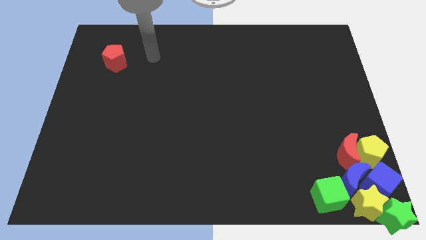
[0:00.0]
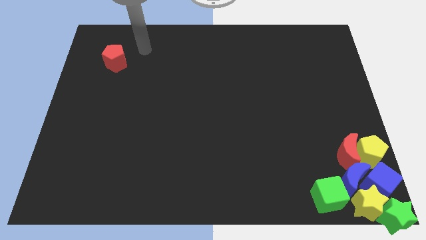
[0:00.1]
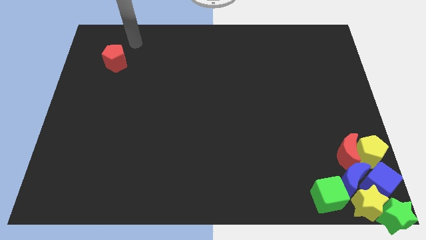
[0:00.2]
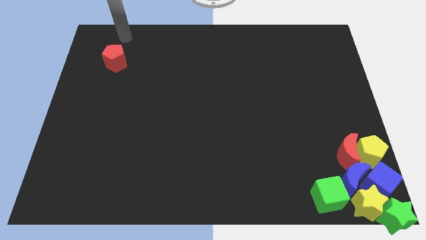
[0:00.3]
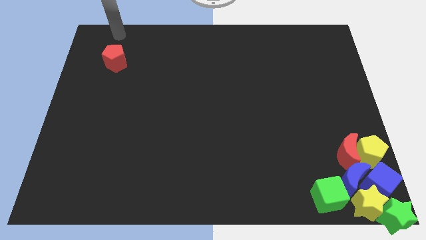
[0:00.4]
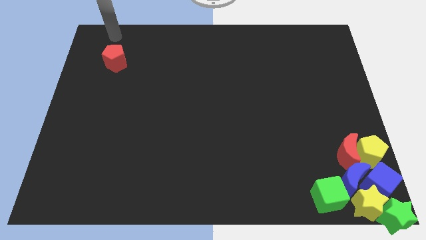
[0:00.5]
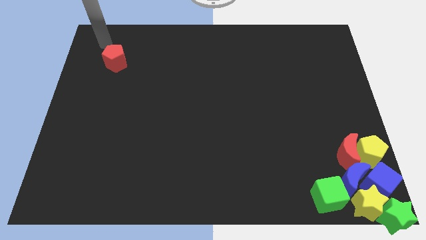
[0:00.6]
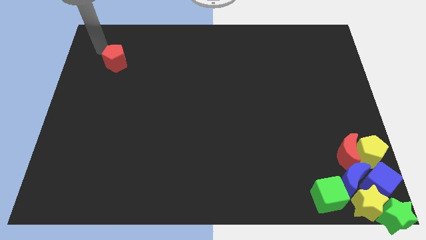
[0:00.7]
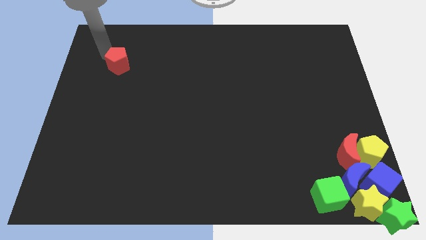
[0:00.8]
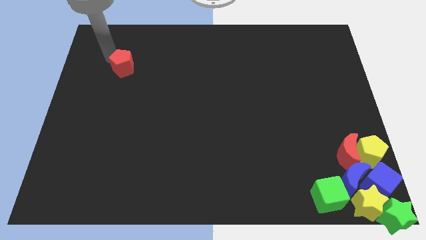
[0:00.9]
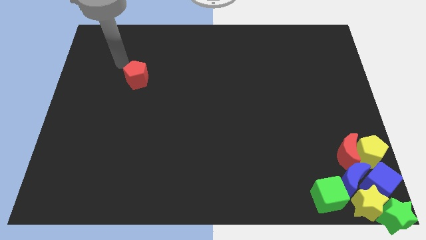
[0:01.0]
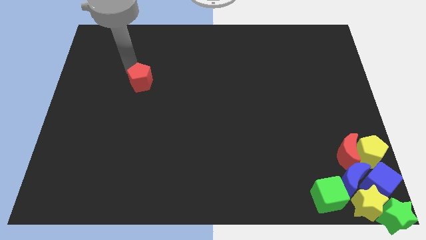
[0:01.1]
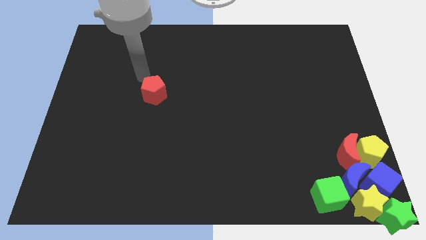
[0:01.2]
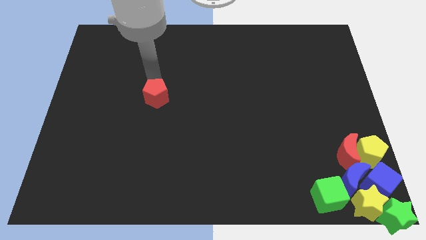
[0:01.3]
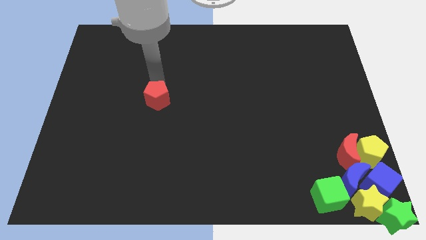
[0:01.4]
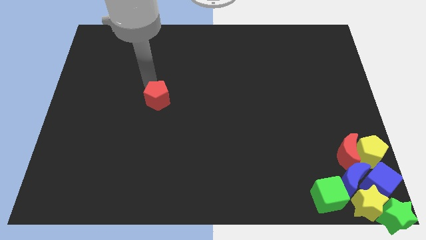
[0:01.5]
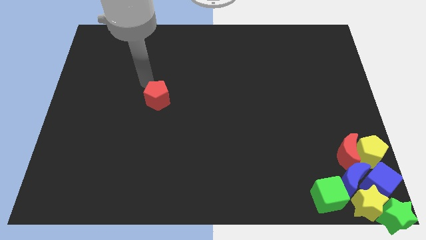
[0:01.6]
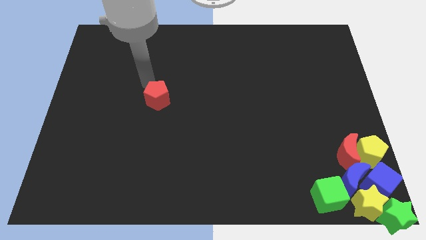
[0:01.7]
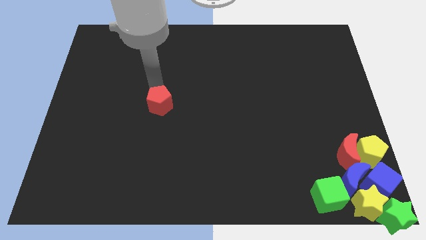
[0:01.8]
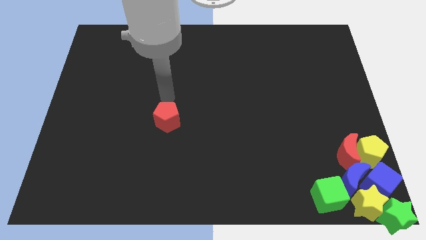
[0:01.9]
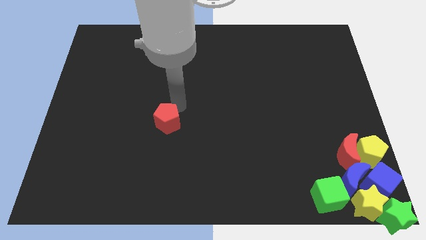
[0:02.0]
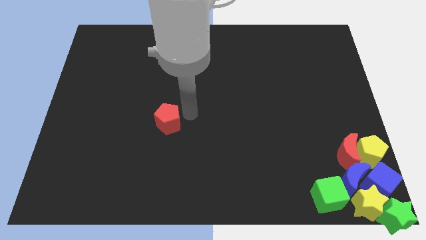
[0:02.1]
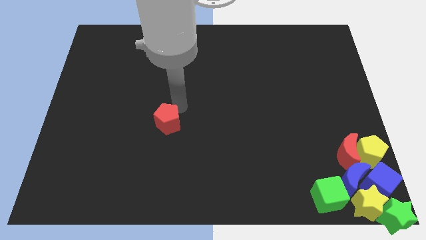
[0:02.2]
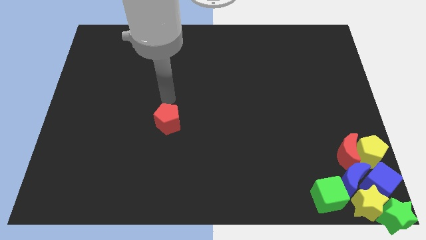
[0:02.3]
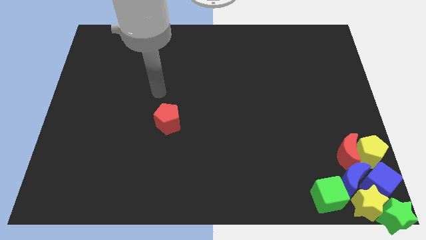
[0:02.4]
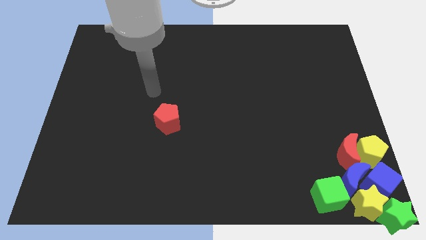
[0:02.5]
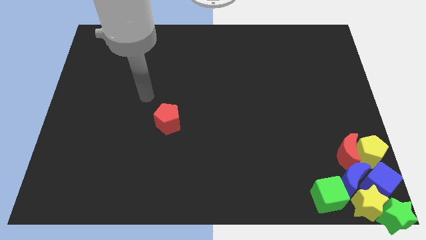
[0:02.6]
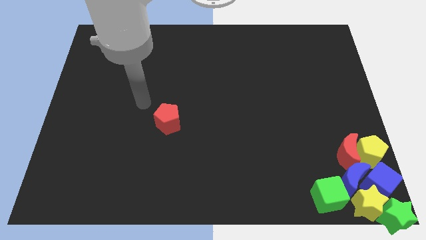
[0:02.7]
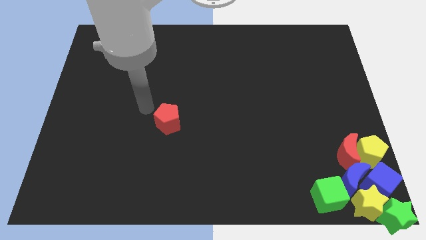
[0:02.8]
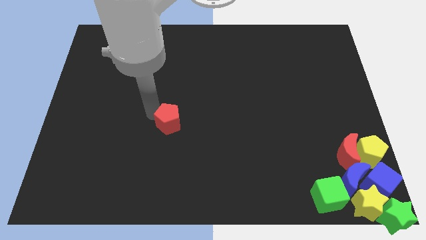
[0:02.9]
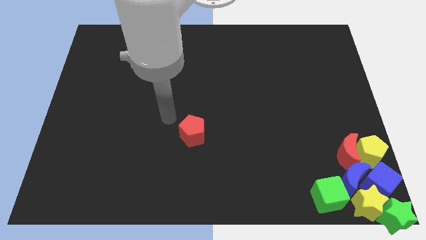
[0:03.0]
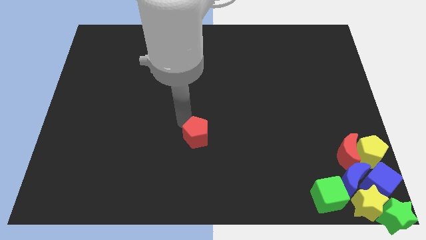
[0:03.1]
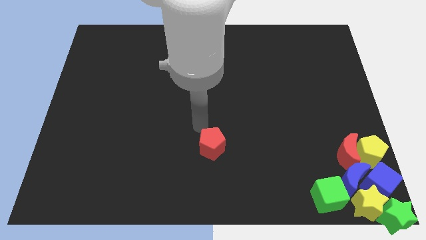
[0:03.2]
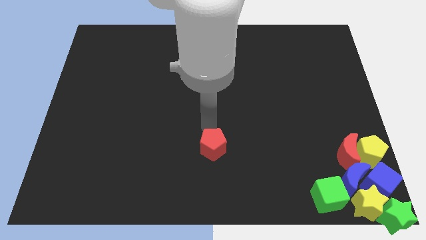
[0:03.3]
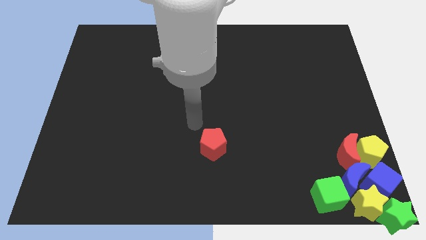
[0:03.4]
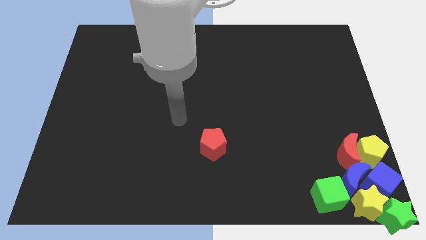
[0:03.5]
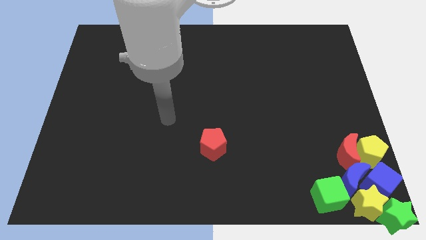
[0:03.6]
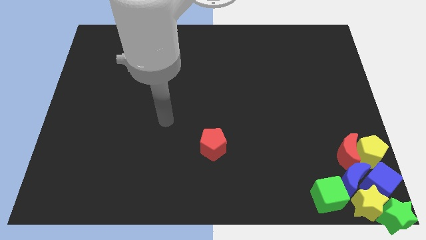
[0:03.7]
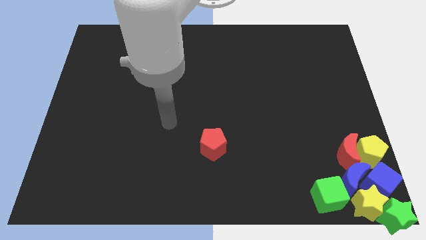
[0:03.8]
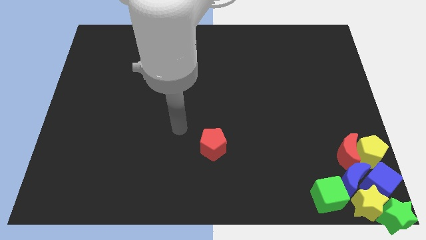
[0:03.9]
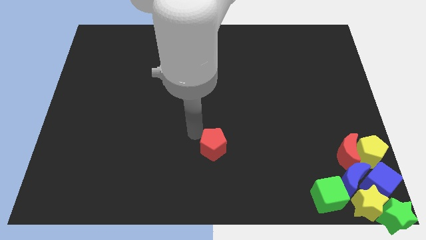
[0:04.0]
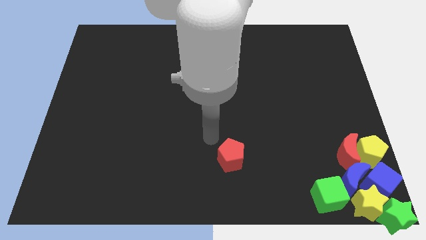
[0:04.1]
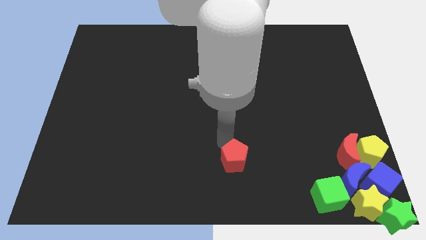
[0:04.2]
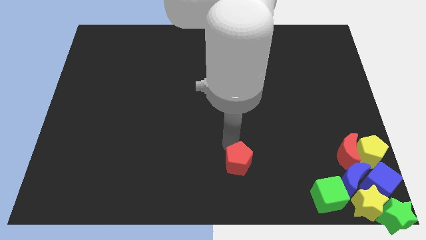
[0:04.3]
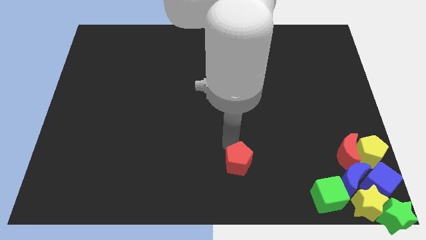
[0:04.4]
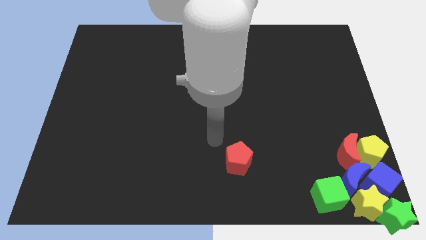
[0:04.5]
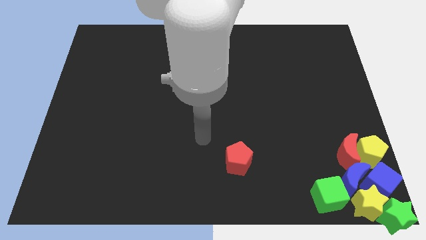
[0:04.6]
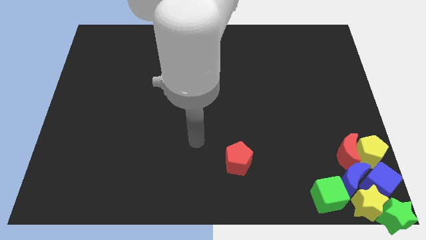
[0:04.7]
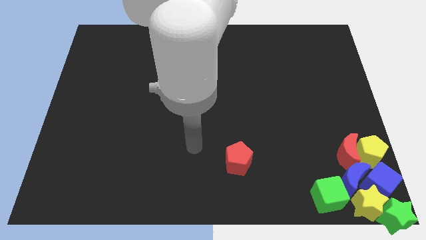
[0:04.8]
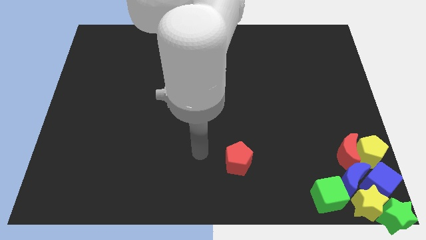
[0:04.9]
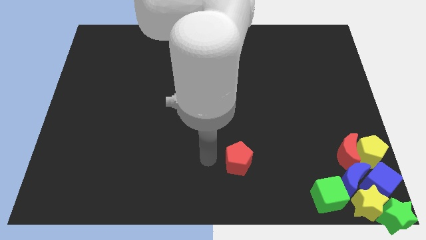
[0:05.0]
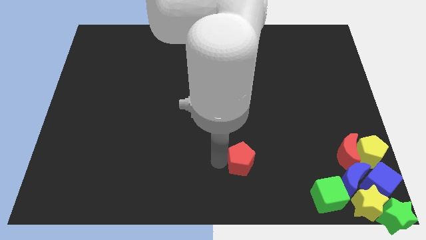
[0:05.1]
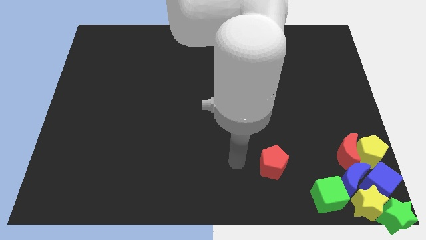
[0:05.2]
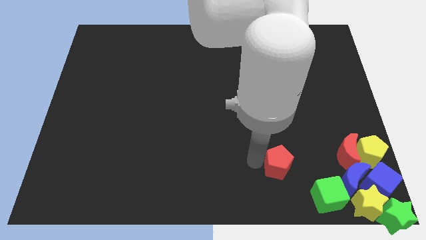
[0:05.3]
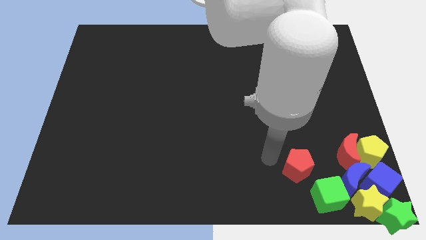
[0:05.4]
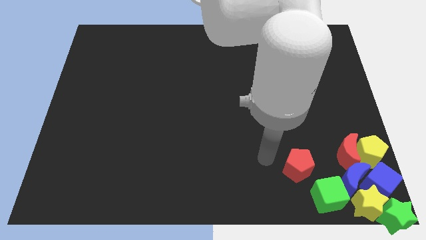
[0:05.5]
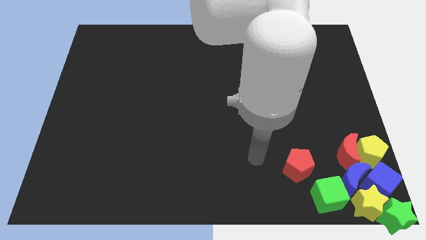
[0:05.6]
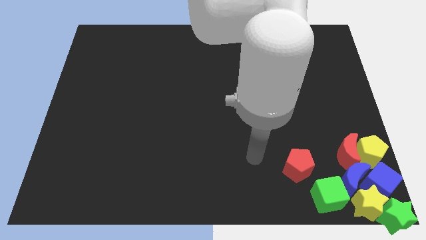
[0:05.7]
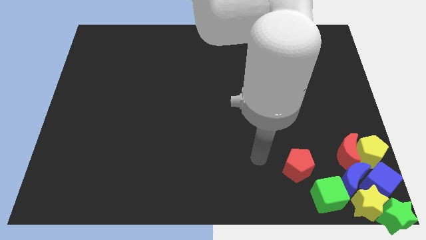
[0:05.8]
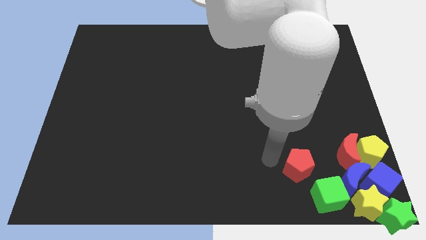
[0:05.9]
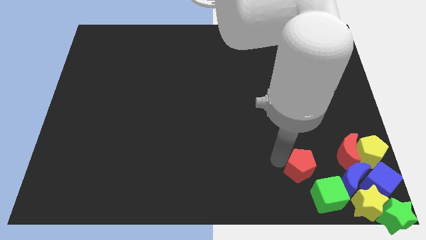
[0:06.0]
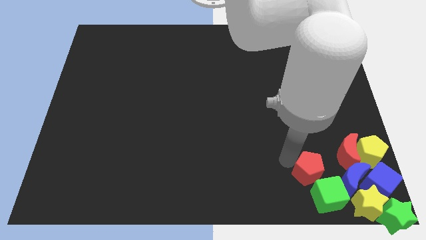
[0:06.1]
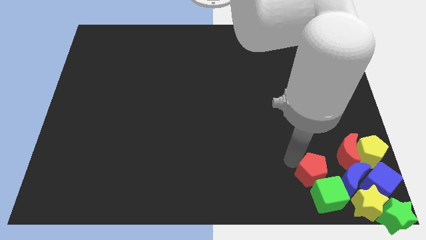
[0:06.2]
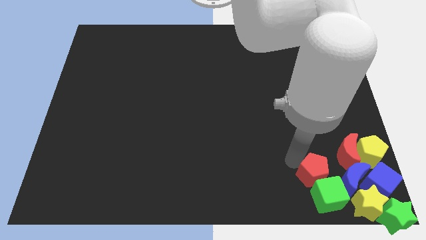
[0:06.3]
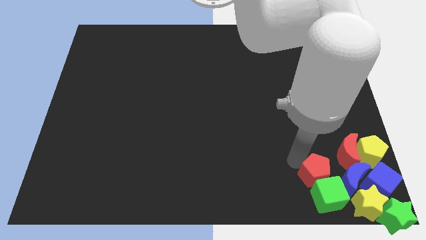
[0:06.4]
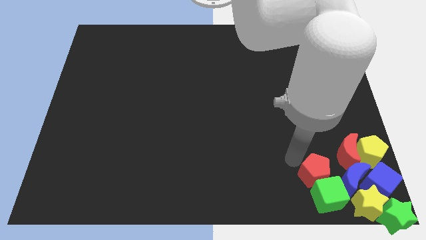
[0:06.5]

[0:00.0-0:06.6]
move the red pentagon to the top left side of the green cube

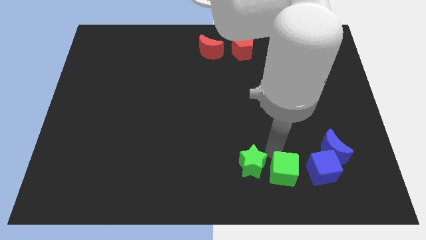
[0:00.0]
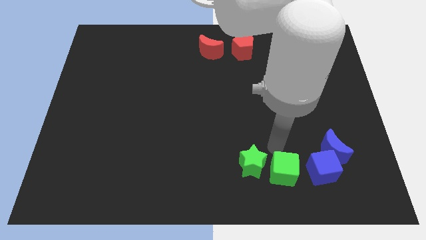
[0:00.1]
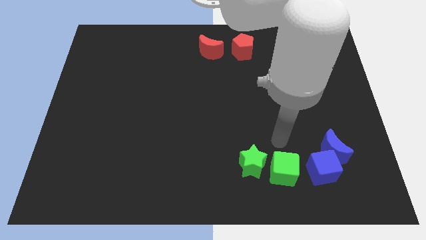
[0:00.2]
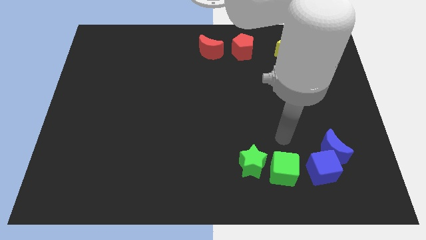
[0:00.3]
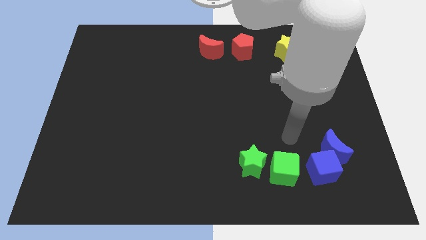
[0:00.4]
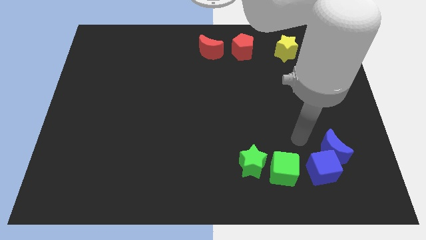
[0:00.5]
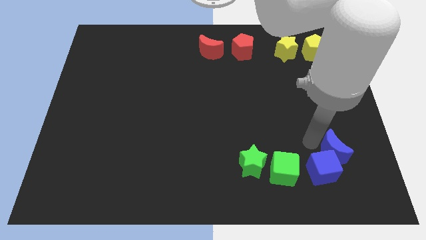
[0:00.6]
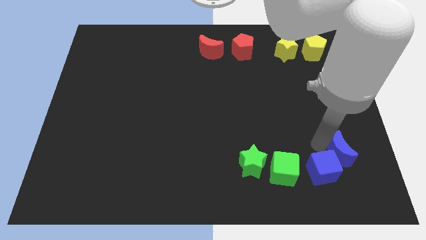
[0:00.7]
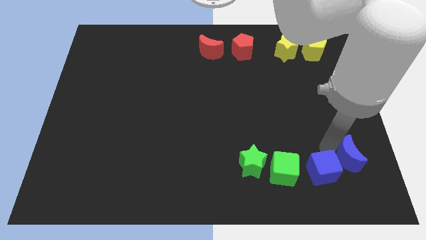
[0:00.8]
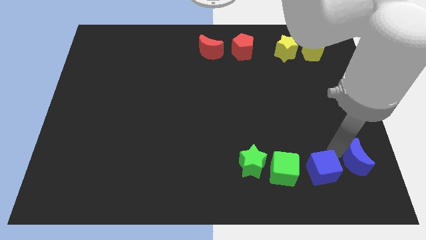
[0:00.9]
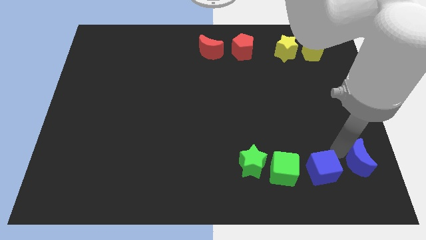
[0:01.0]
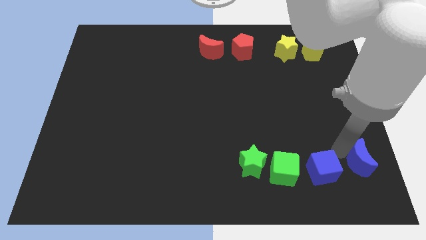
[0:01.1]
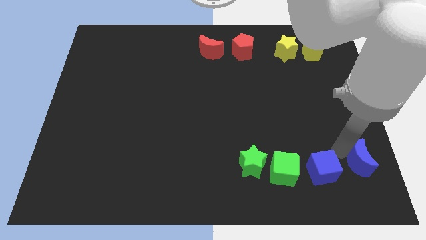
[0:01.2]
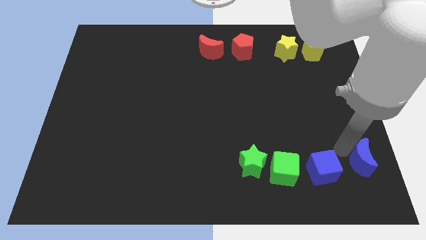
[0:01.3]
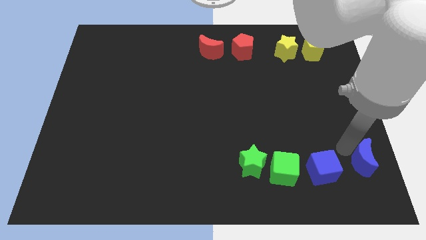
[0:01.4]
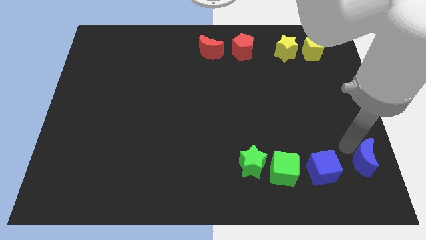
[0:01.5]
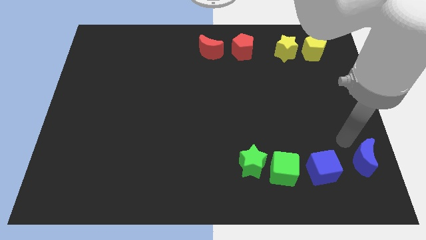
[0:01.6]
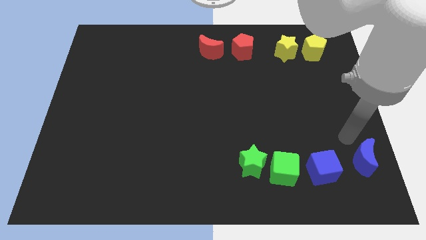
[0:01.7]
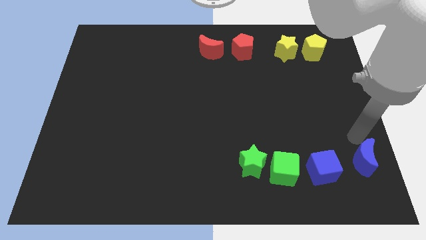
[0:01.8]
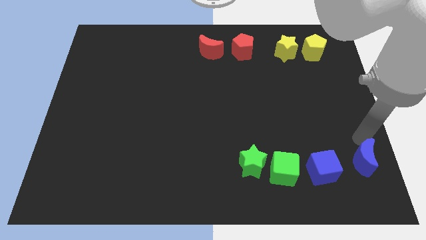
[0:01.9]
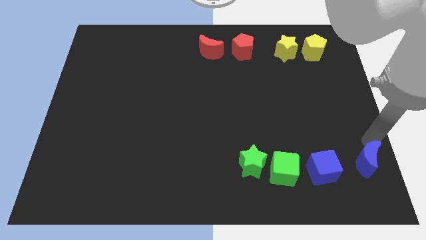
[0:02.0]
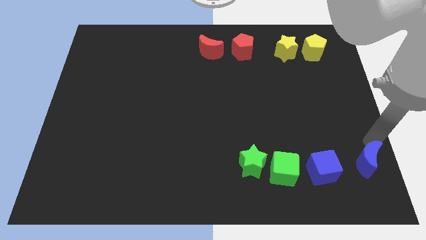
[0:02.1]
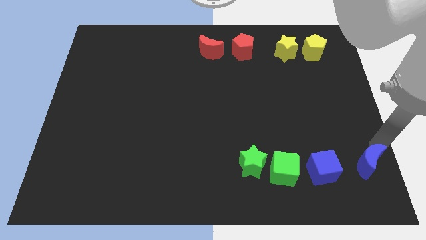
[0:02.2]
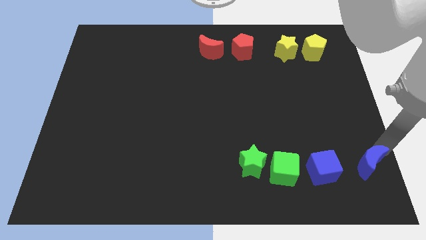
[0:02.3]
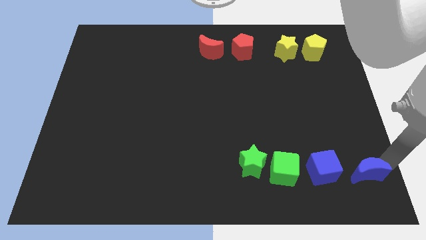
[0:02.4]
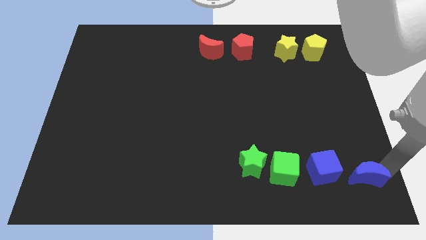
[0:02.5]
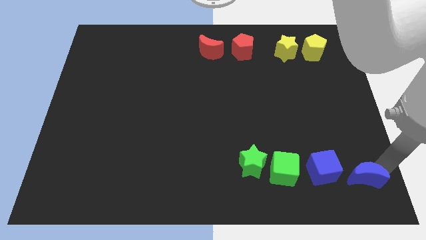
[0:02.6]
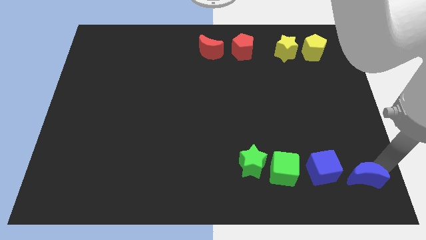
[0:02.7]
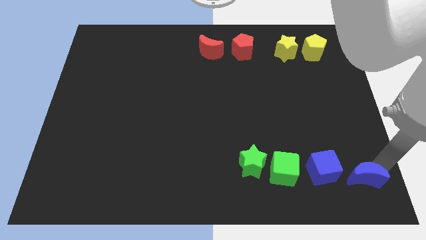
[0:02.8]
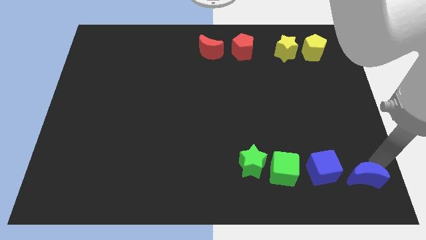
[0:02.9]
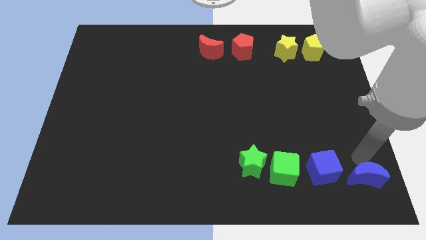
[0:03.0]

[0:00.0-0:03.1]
push the blue moon to the right of the blue cube
